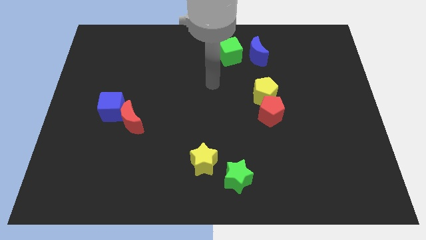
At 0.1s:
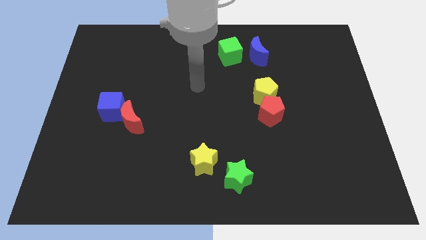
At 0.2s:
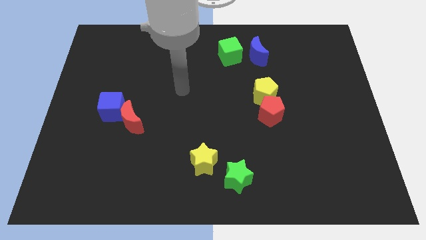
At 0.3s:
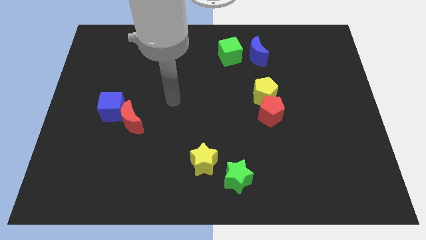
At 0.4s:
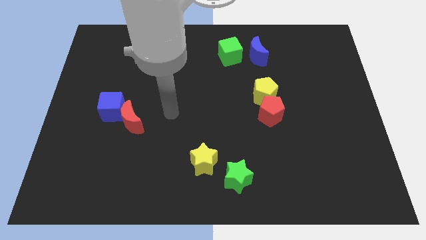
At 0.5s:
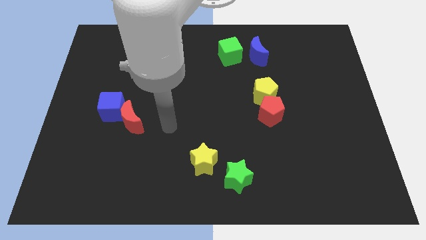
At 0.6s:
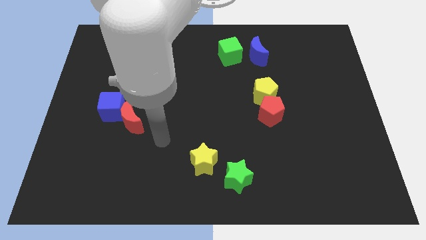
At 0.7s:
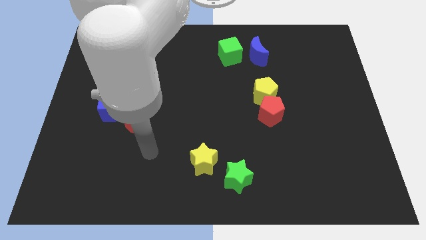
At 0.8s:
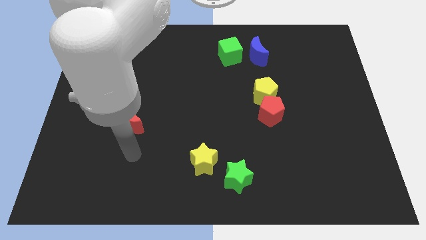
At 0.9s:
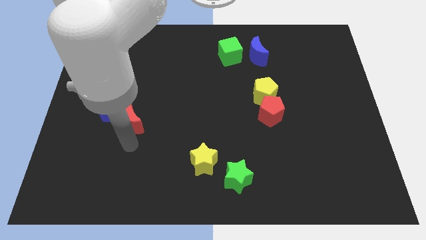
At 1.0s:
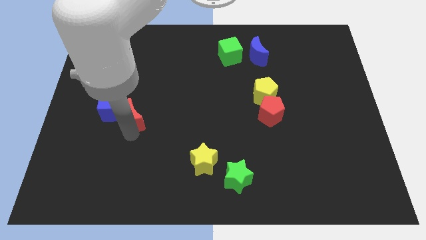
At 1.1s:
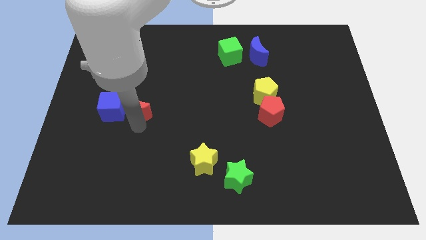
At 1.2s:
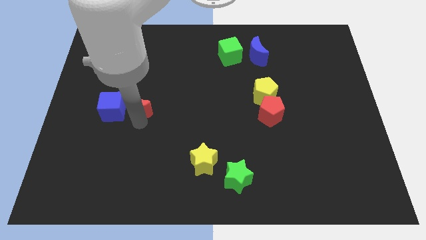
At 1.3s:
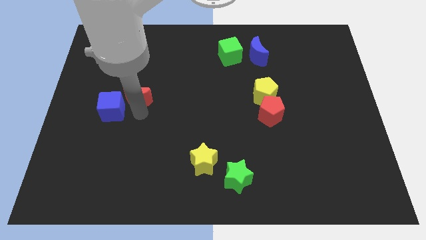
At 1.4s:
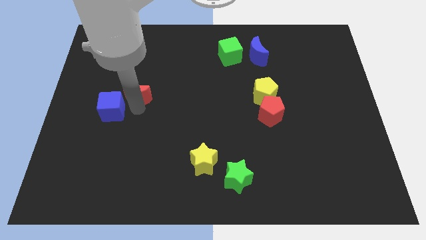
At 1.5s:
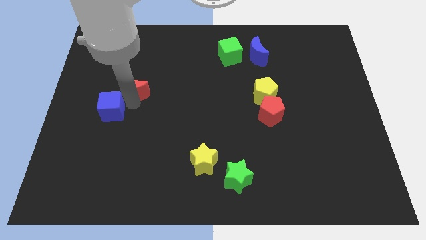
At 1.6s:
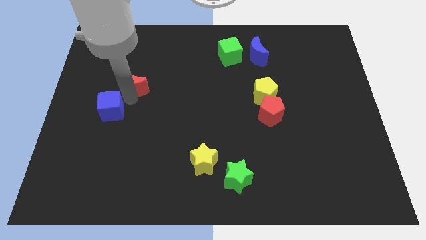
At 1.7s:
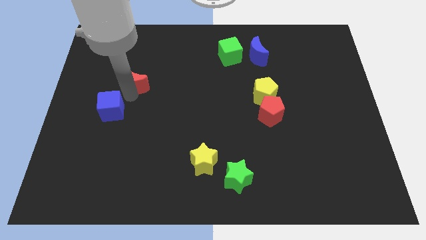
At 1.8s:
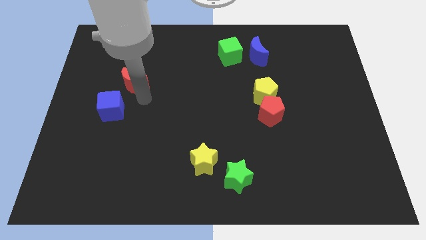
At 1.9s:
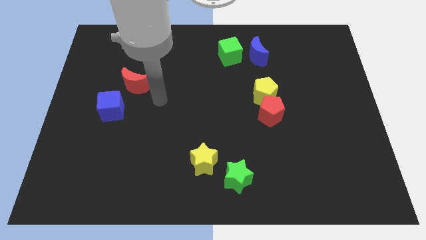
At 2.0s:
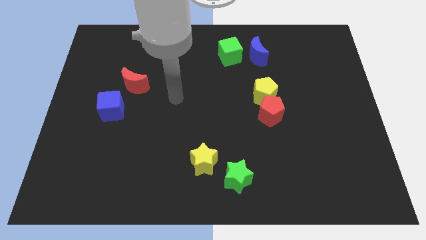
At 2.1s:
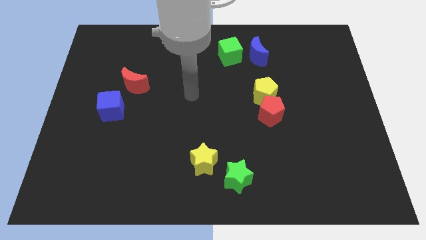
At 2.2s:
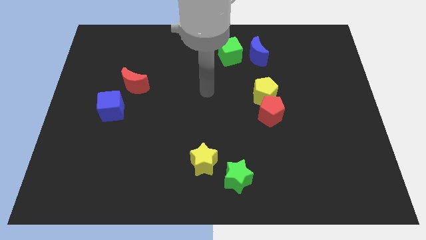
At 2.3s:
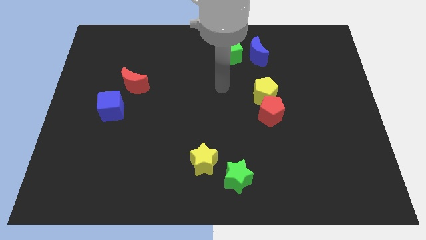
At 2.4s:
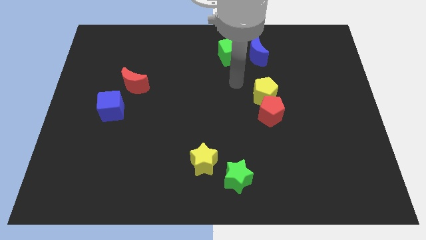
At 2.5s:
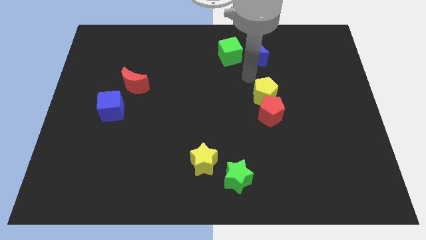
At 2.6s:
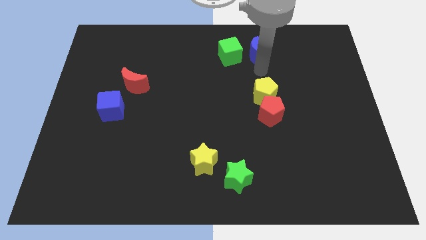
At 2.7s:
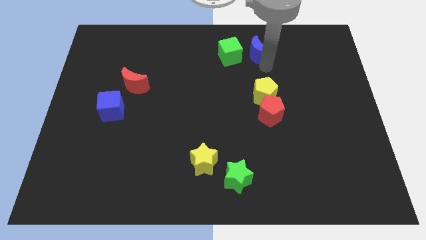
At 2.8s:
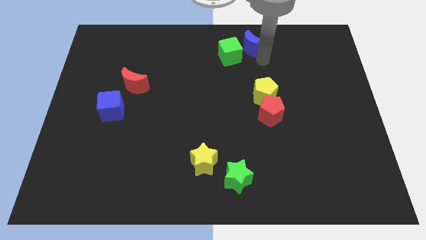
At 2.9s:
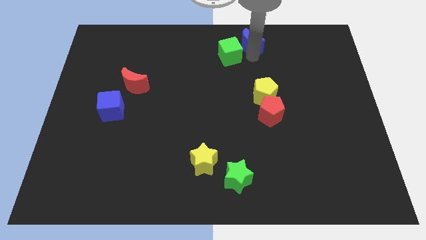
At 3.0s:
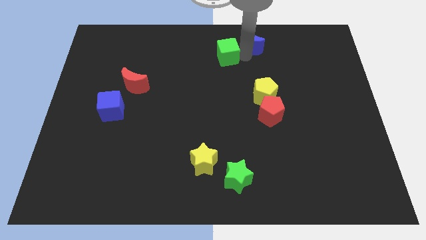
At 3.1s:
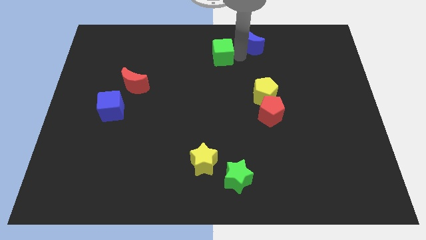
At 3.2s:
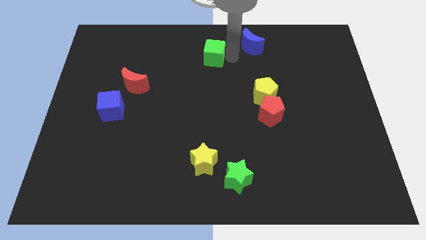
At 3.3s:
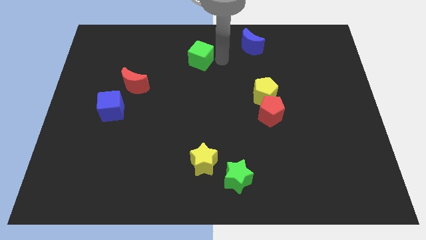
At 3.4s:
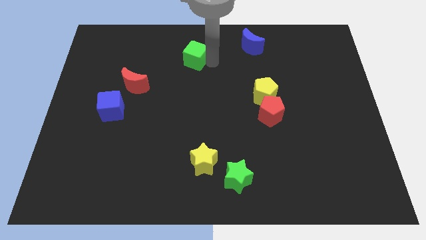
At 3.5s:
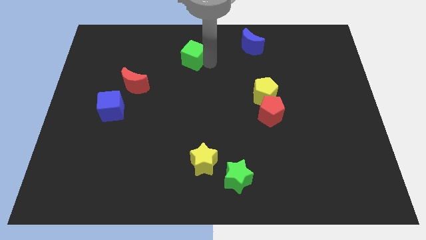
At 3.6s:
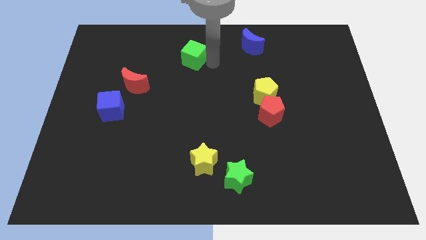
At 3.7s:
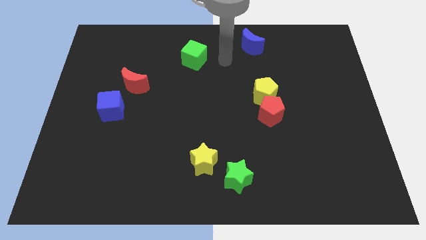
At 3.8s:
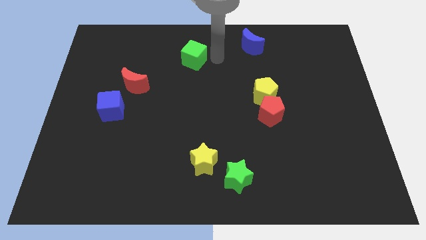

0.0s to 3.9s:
place the green cube in between the red moon and blue moon

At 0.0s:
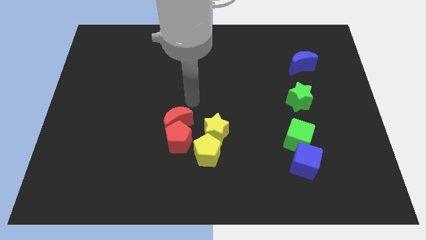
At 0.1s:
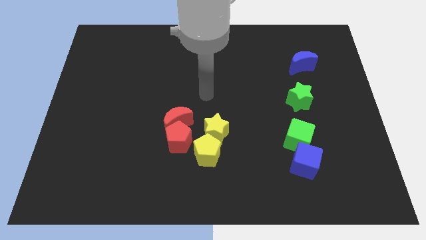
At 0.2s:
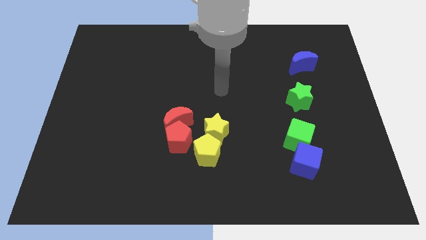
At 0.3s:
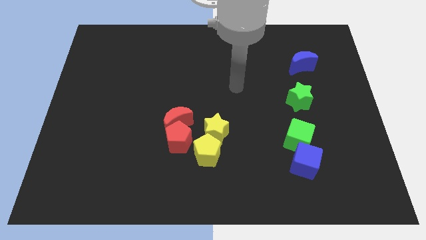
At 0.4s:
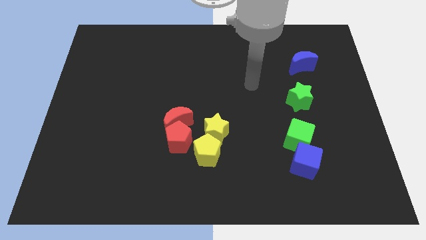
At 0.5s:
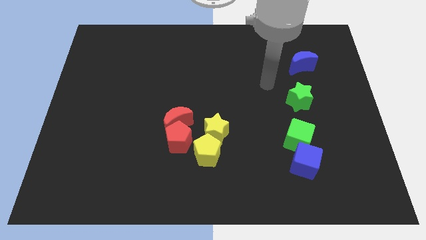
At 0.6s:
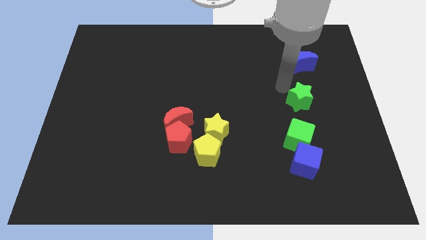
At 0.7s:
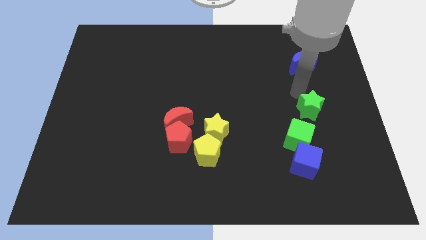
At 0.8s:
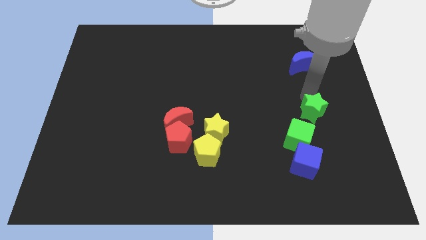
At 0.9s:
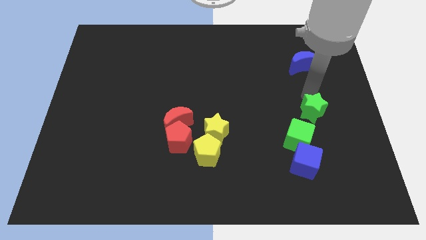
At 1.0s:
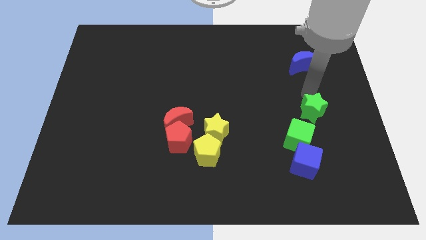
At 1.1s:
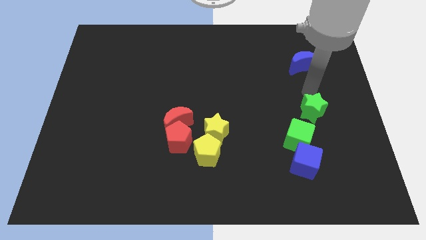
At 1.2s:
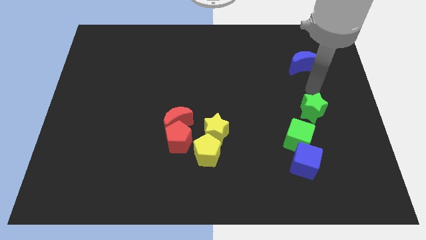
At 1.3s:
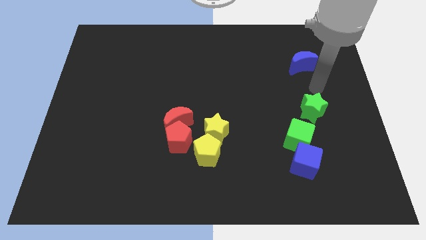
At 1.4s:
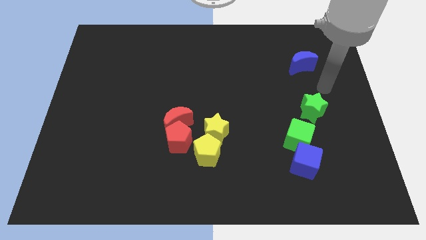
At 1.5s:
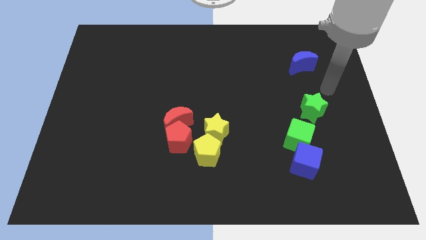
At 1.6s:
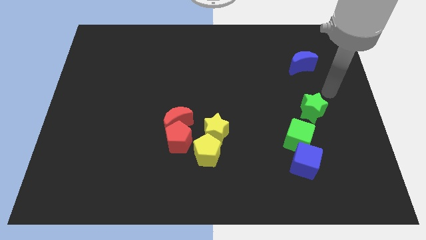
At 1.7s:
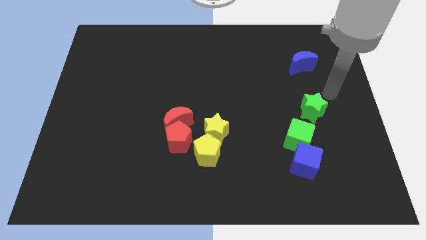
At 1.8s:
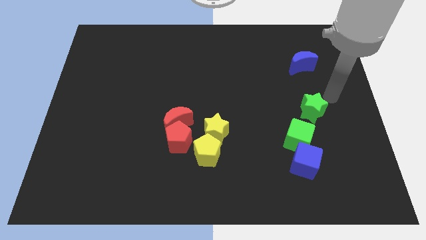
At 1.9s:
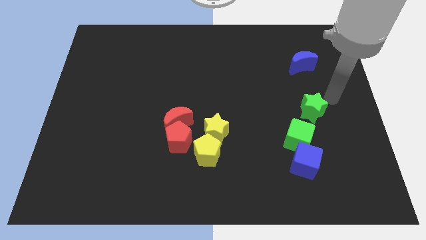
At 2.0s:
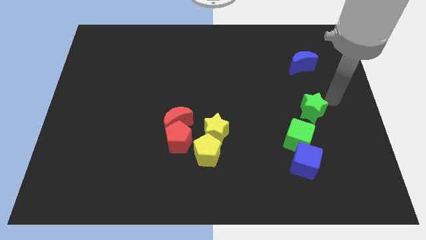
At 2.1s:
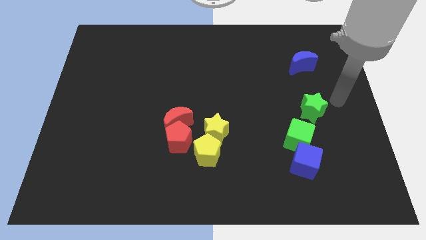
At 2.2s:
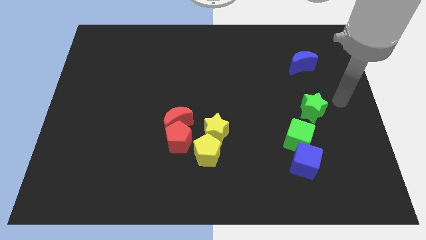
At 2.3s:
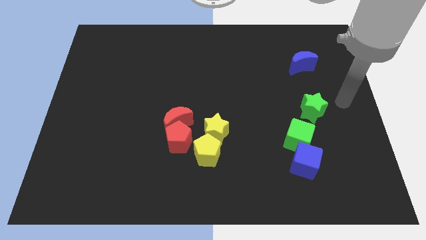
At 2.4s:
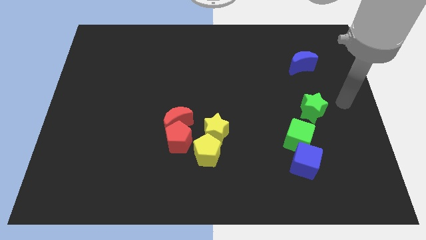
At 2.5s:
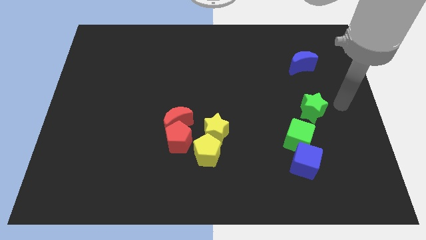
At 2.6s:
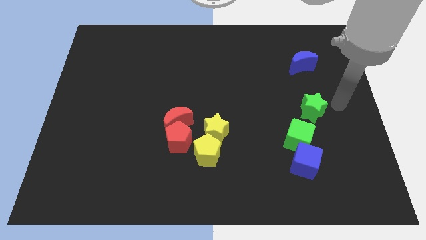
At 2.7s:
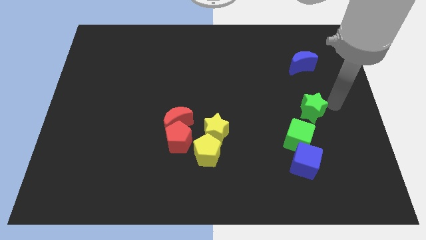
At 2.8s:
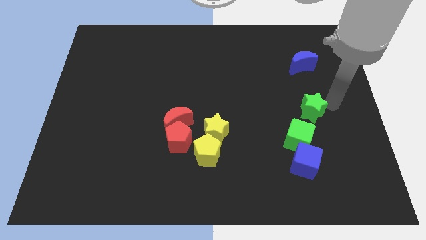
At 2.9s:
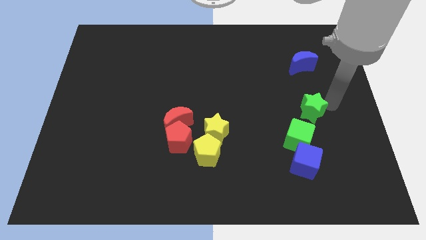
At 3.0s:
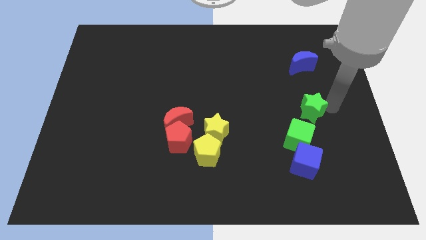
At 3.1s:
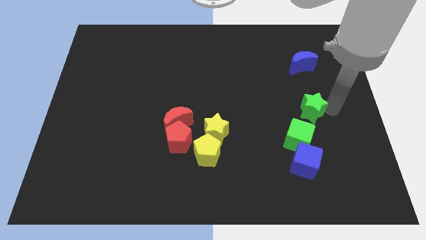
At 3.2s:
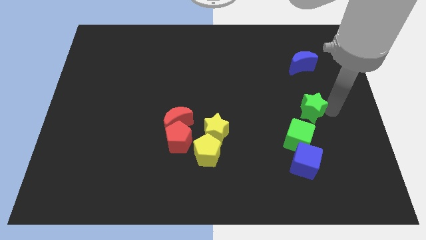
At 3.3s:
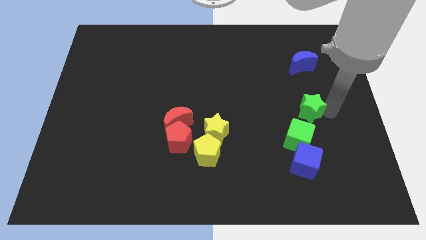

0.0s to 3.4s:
push the green star to the bottom side

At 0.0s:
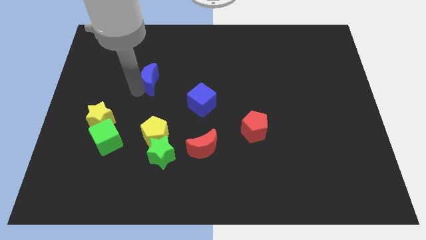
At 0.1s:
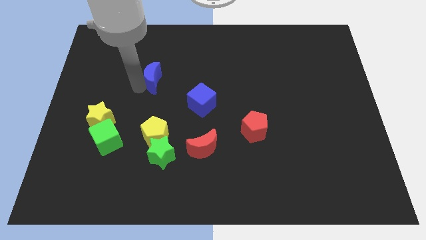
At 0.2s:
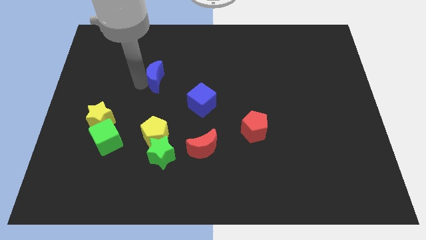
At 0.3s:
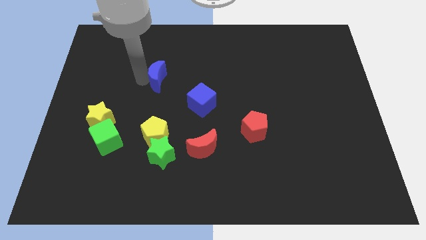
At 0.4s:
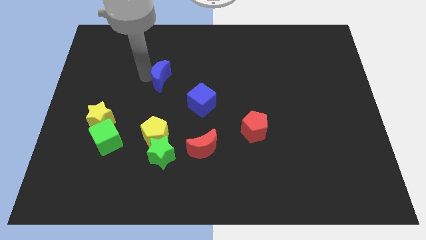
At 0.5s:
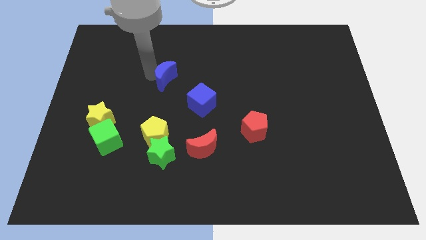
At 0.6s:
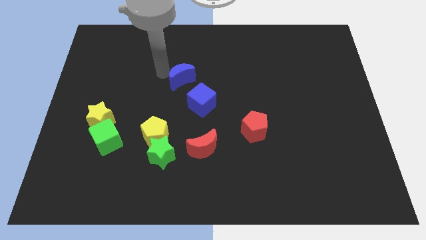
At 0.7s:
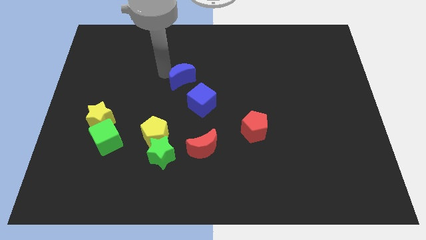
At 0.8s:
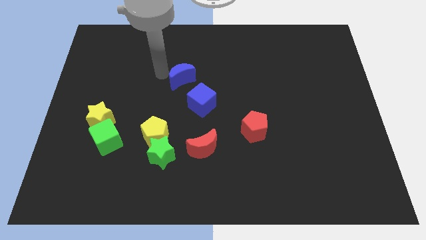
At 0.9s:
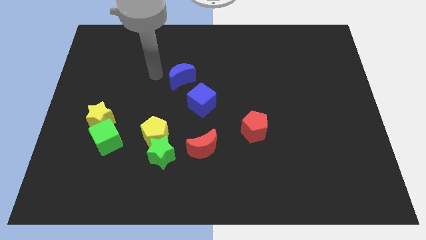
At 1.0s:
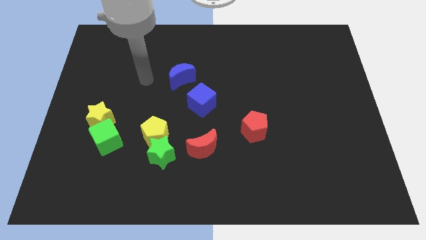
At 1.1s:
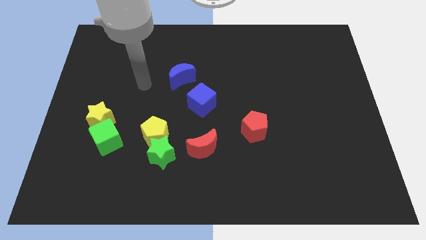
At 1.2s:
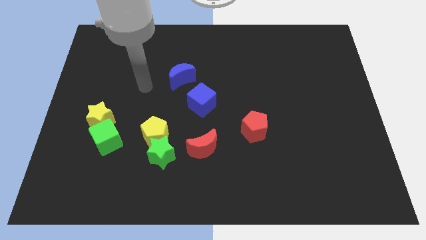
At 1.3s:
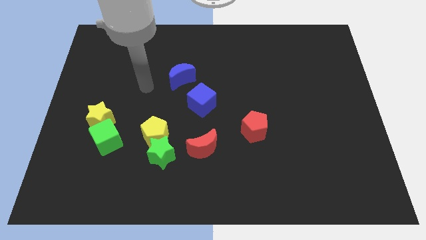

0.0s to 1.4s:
place the blue moon above the blue cube

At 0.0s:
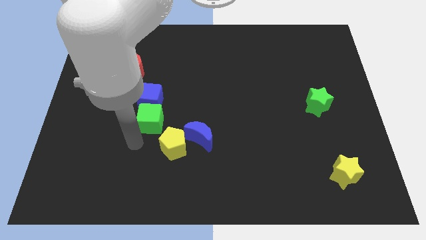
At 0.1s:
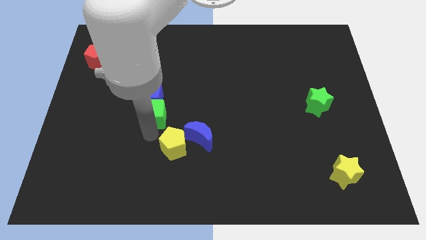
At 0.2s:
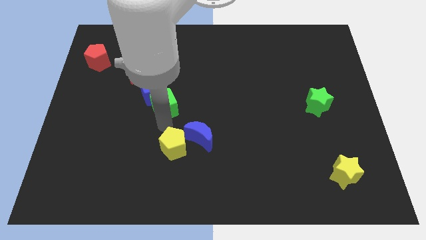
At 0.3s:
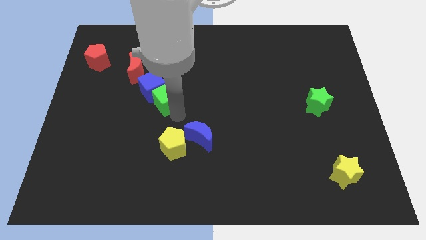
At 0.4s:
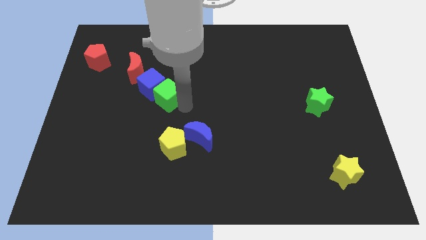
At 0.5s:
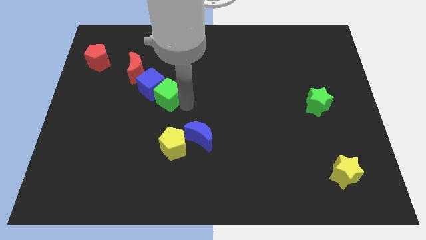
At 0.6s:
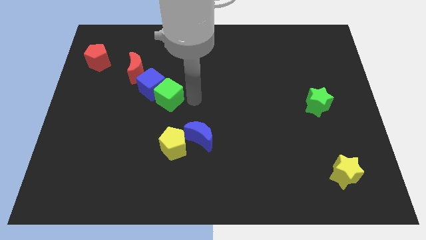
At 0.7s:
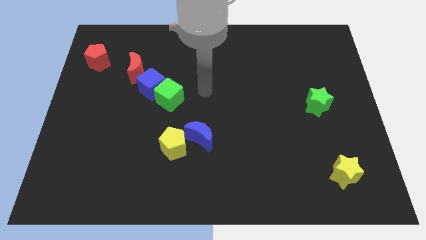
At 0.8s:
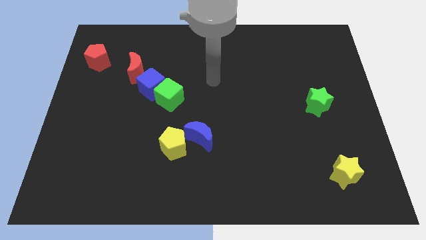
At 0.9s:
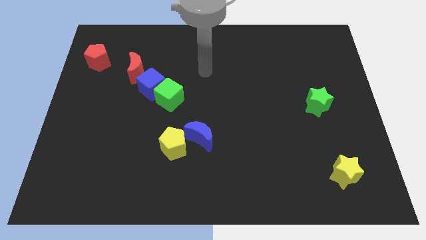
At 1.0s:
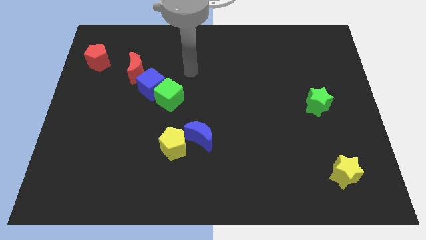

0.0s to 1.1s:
push the green cube into the blue cube
